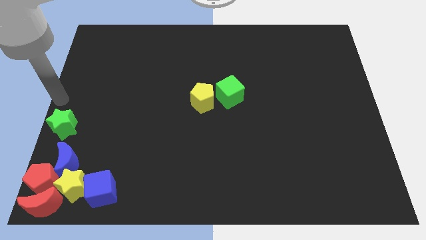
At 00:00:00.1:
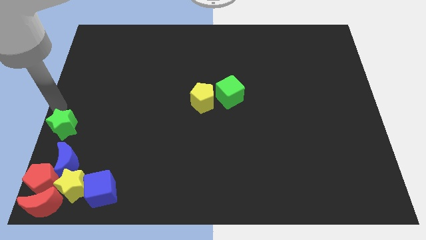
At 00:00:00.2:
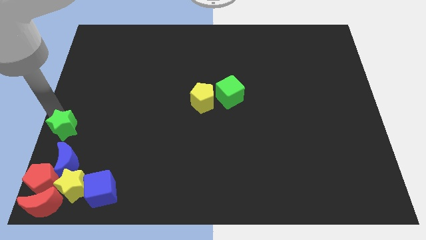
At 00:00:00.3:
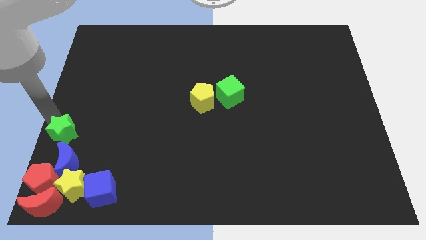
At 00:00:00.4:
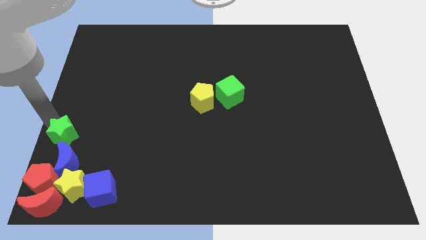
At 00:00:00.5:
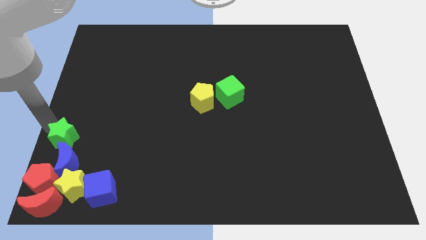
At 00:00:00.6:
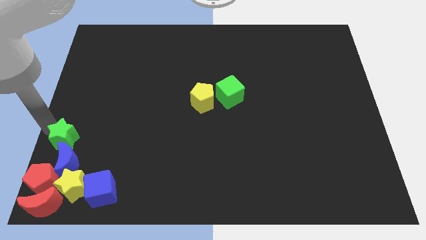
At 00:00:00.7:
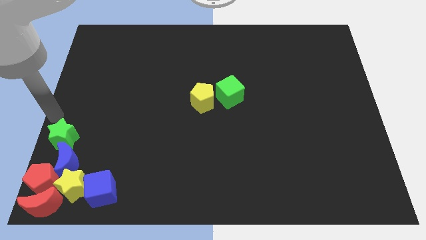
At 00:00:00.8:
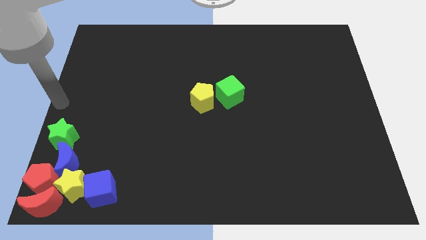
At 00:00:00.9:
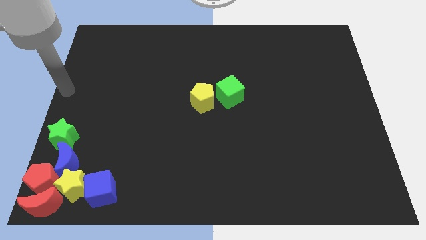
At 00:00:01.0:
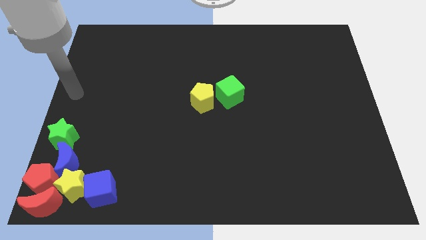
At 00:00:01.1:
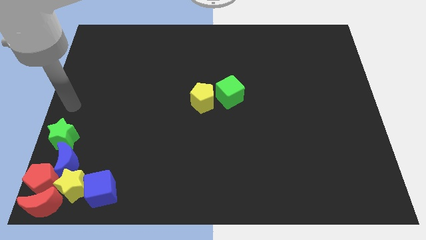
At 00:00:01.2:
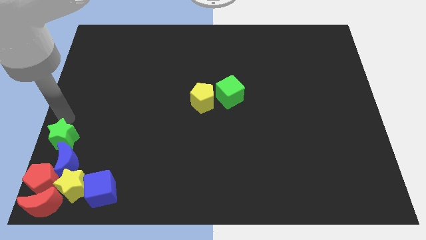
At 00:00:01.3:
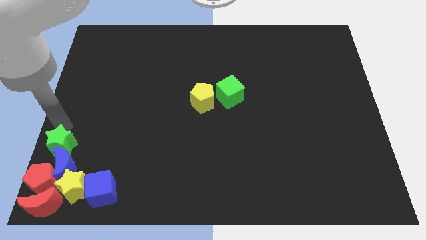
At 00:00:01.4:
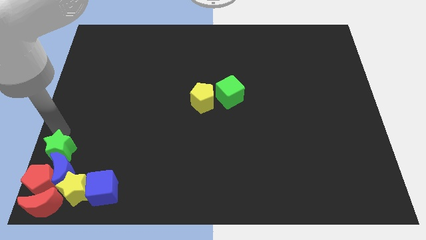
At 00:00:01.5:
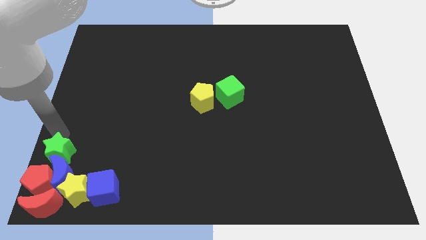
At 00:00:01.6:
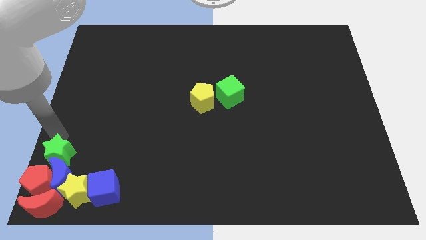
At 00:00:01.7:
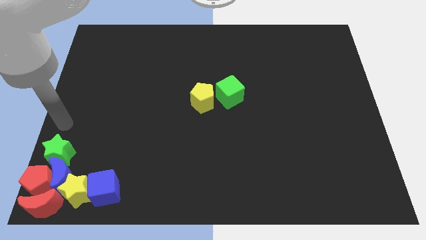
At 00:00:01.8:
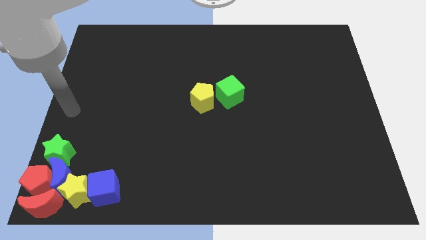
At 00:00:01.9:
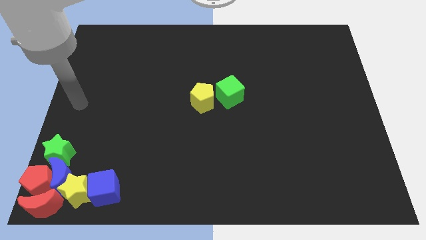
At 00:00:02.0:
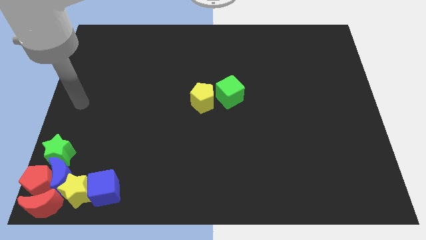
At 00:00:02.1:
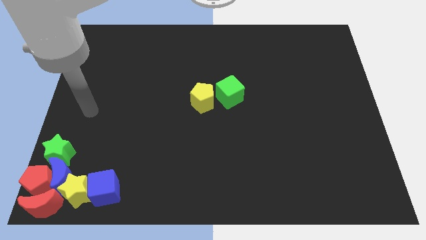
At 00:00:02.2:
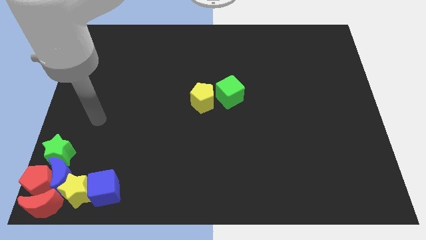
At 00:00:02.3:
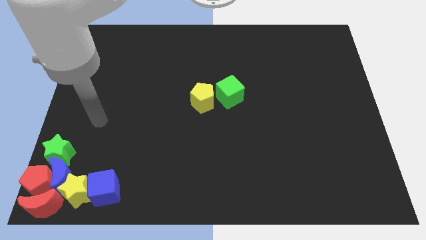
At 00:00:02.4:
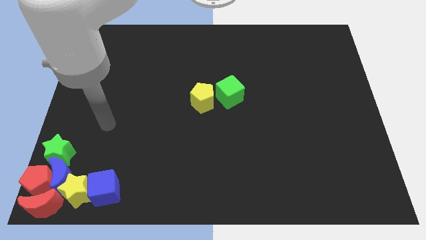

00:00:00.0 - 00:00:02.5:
move the green star above blue crescent

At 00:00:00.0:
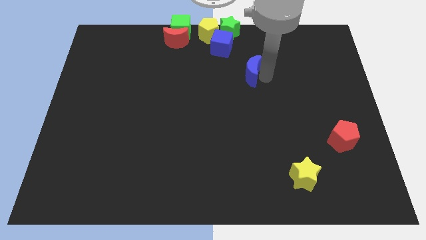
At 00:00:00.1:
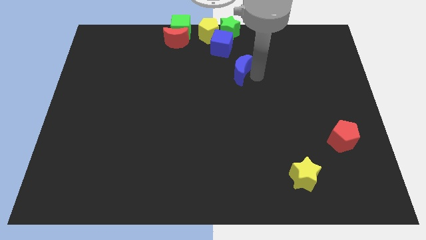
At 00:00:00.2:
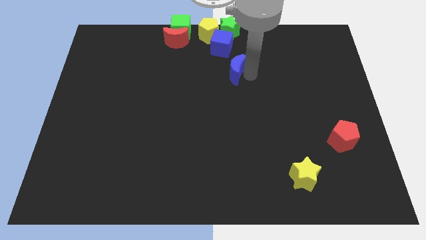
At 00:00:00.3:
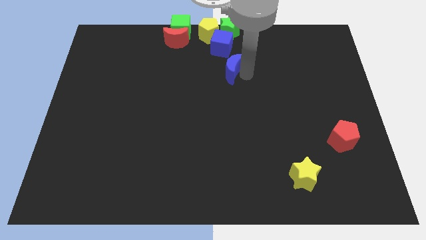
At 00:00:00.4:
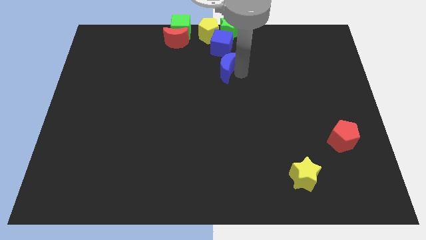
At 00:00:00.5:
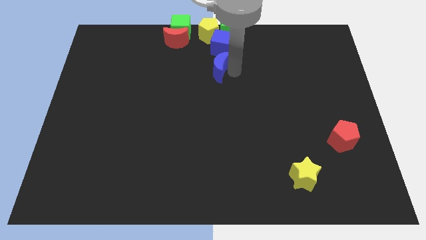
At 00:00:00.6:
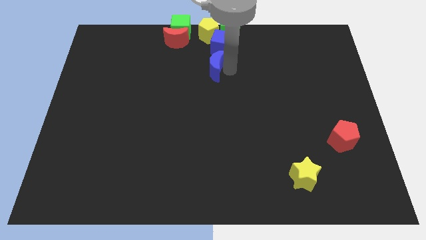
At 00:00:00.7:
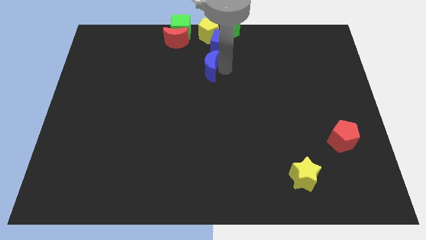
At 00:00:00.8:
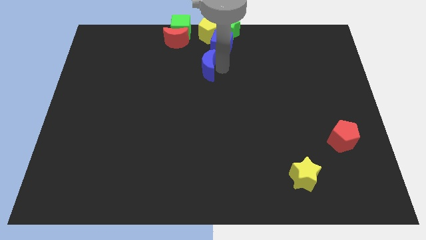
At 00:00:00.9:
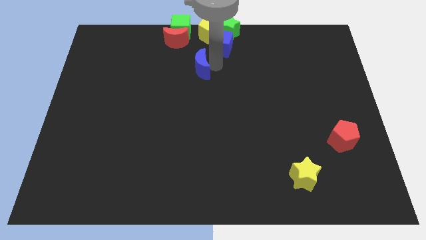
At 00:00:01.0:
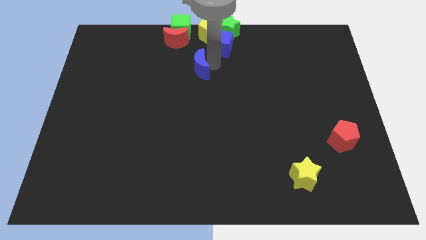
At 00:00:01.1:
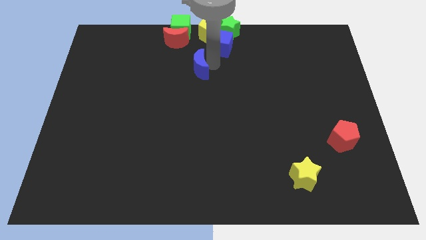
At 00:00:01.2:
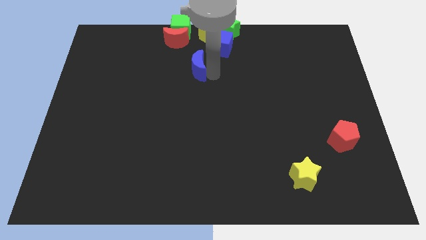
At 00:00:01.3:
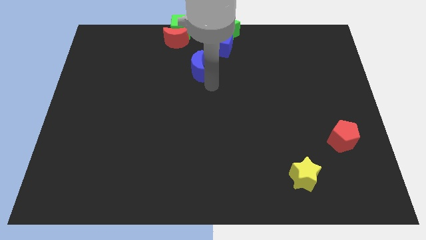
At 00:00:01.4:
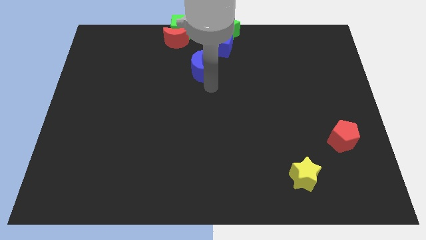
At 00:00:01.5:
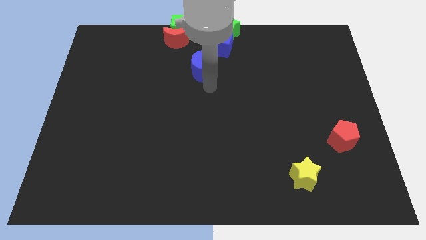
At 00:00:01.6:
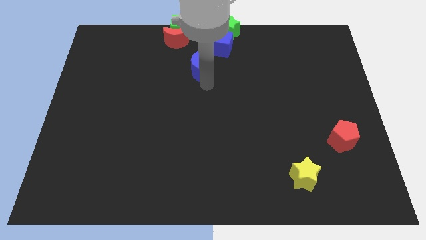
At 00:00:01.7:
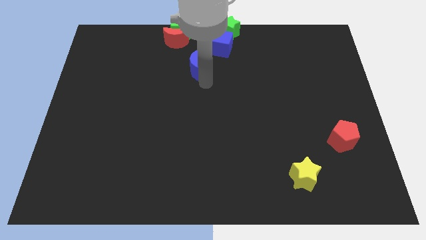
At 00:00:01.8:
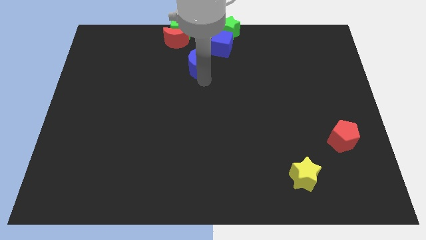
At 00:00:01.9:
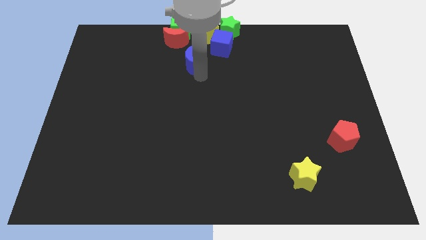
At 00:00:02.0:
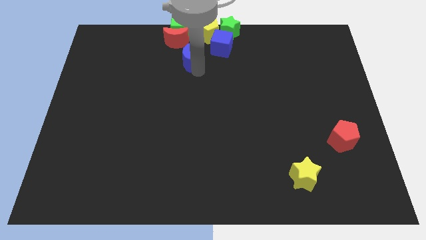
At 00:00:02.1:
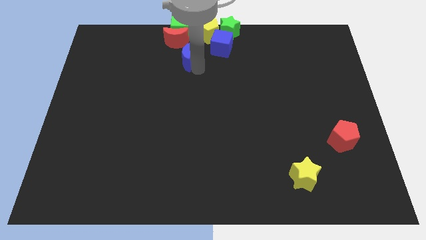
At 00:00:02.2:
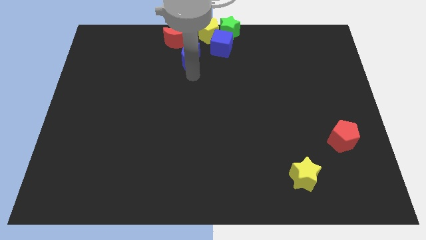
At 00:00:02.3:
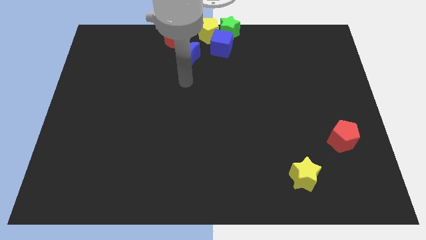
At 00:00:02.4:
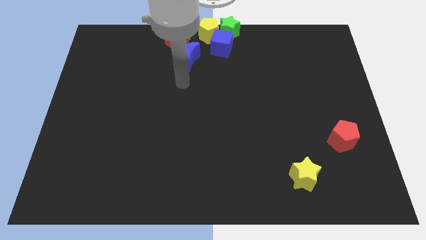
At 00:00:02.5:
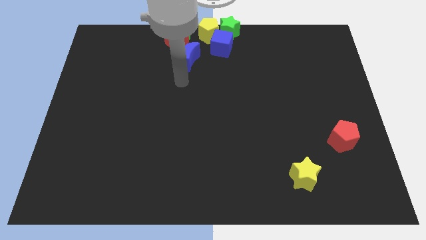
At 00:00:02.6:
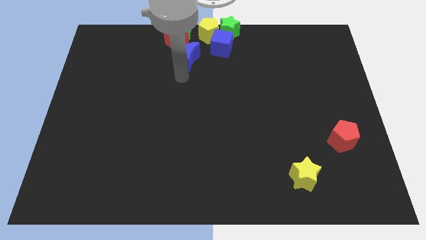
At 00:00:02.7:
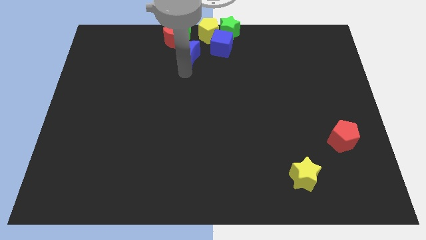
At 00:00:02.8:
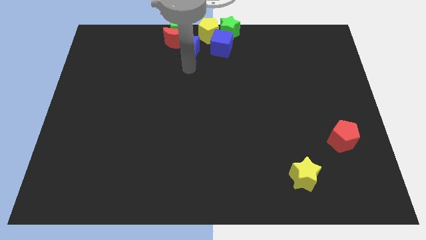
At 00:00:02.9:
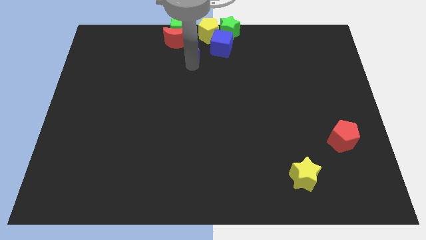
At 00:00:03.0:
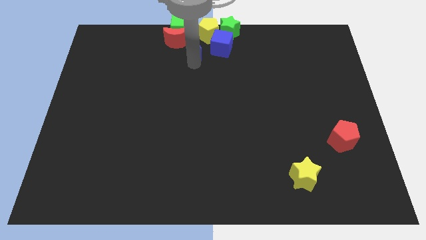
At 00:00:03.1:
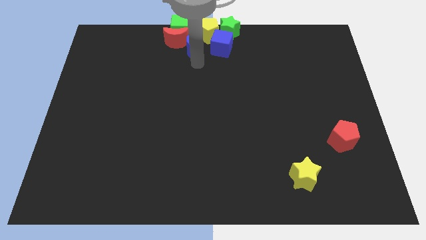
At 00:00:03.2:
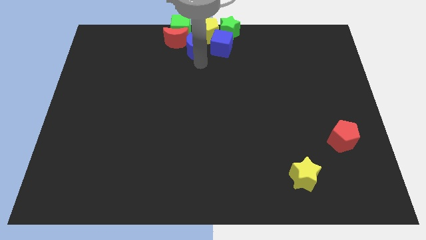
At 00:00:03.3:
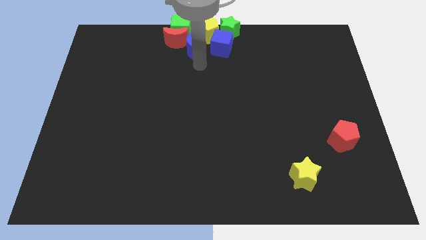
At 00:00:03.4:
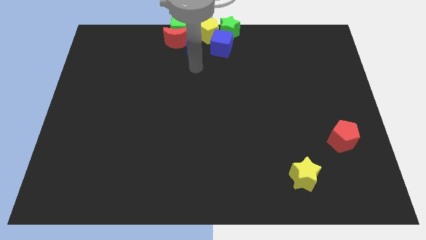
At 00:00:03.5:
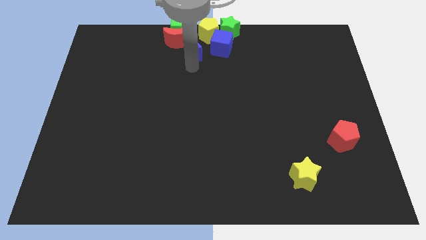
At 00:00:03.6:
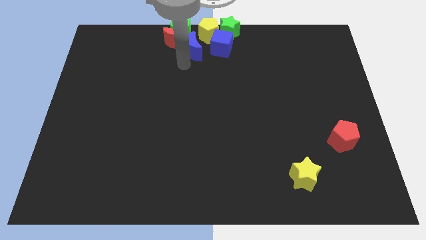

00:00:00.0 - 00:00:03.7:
push blue moon into group of blocks

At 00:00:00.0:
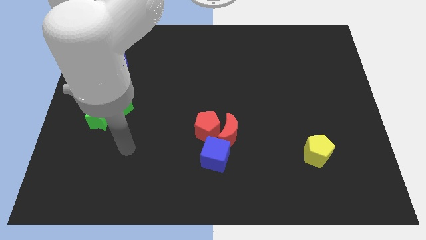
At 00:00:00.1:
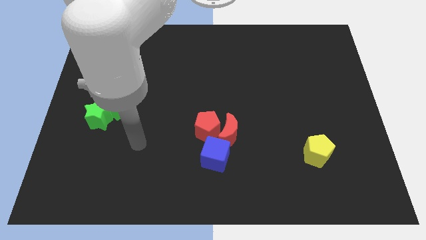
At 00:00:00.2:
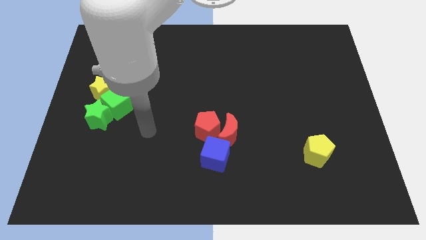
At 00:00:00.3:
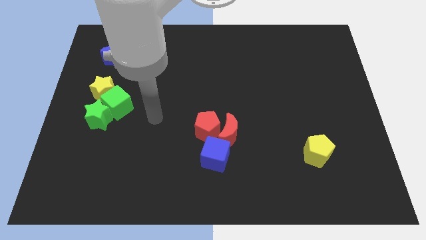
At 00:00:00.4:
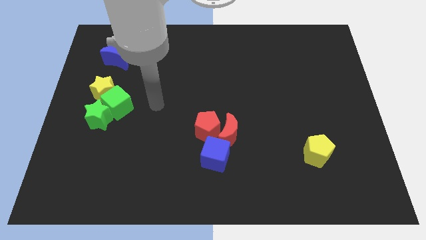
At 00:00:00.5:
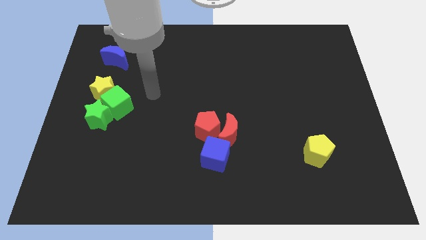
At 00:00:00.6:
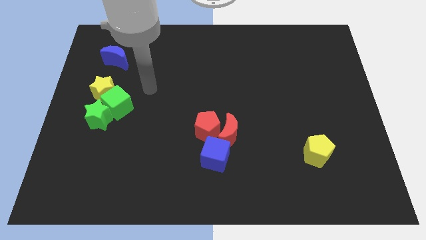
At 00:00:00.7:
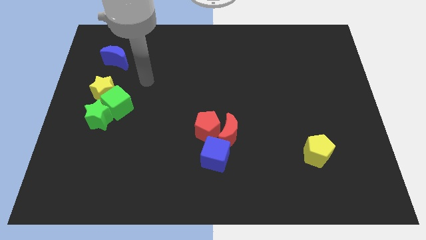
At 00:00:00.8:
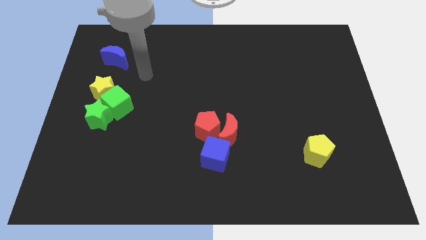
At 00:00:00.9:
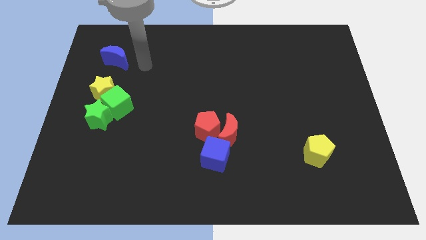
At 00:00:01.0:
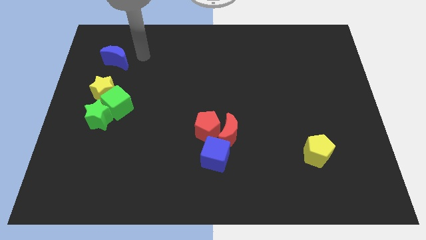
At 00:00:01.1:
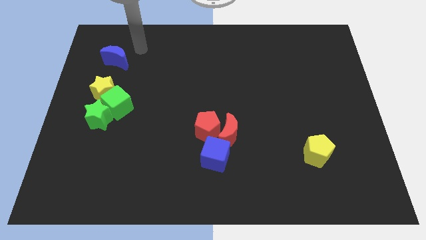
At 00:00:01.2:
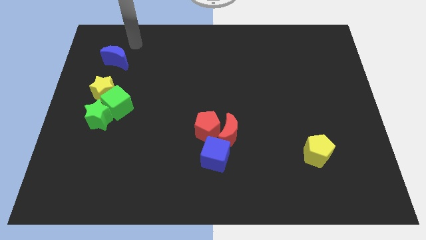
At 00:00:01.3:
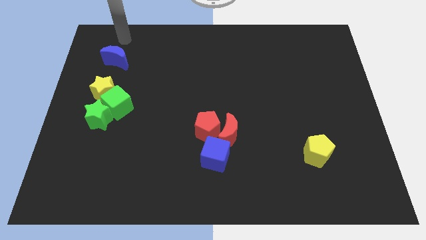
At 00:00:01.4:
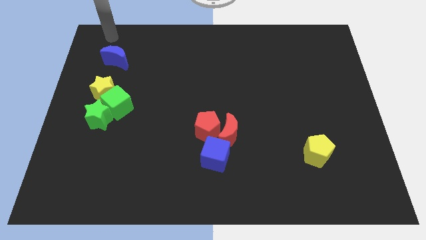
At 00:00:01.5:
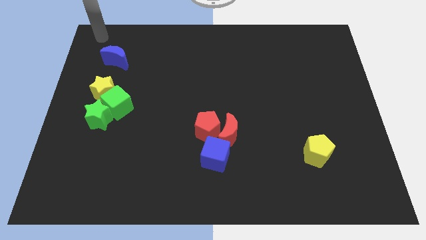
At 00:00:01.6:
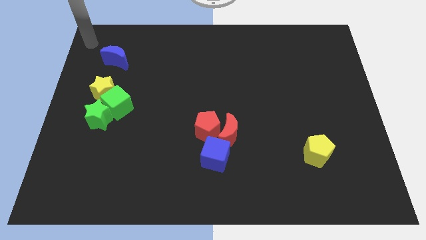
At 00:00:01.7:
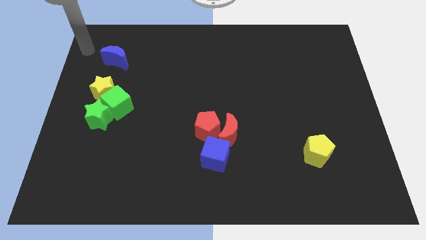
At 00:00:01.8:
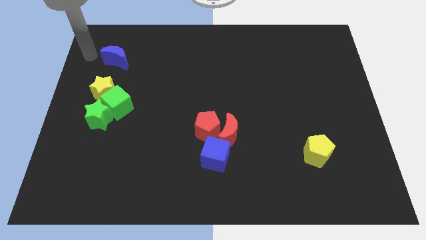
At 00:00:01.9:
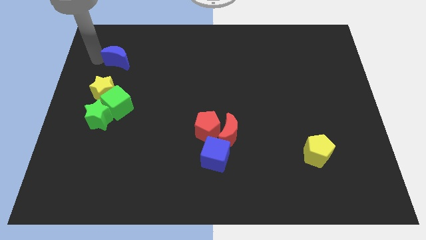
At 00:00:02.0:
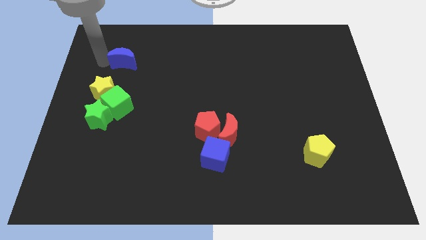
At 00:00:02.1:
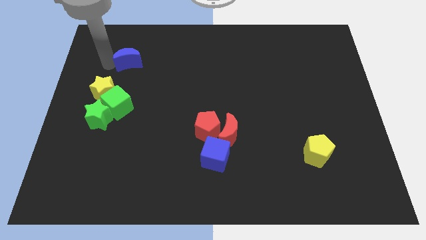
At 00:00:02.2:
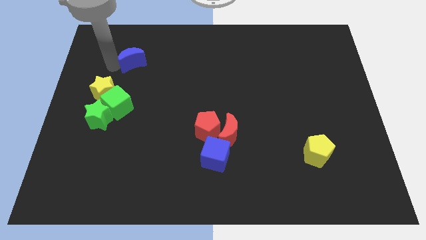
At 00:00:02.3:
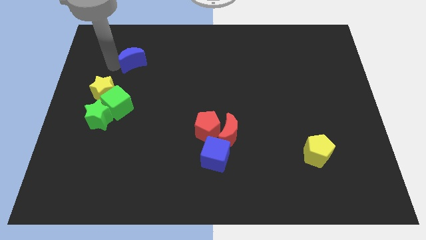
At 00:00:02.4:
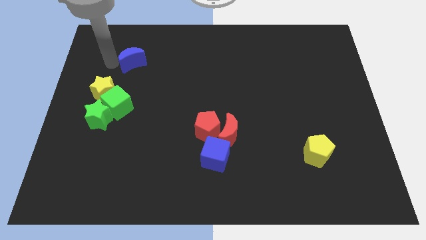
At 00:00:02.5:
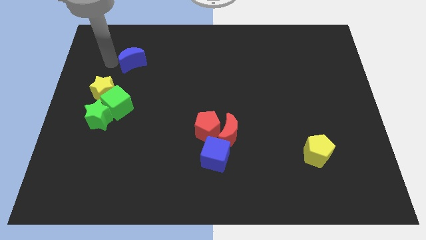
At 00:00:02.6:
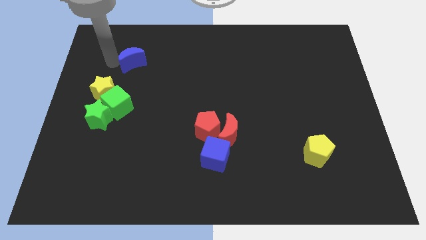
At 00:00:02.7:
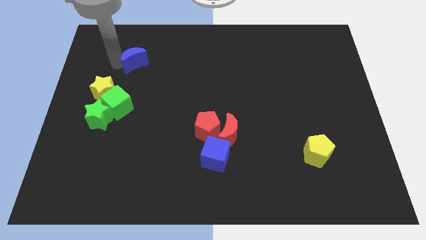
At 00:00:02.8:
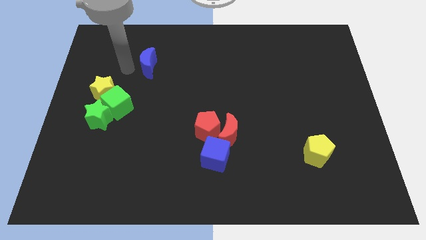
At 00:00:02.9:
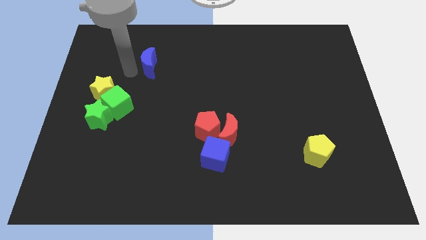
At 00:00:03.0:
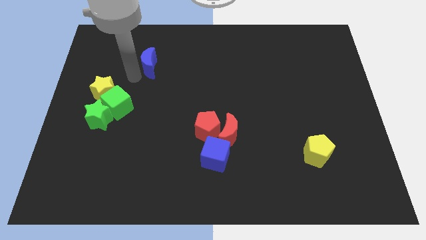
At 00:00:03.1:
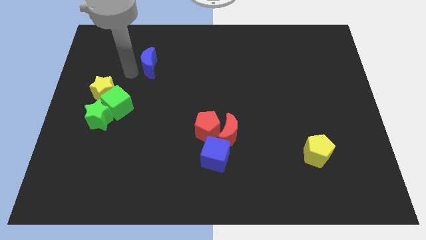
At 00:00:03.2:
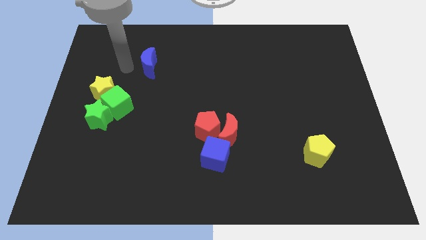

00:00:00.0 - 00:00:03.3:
slide the blue crescent diagonally on the top right side of the yellow star
